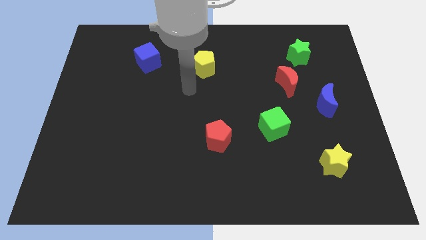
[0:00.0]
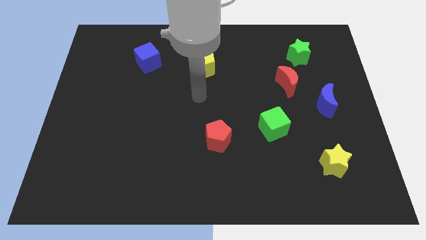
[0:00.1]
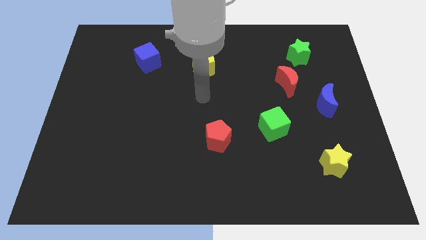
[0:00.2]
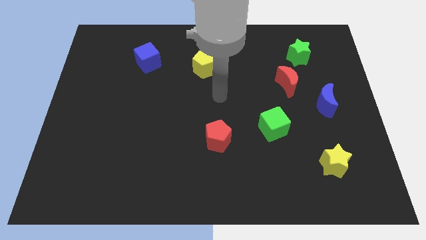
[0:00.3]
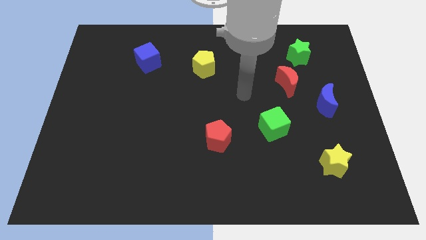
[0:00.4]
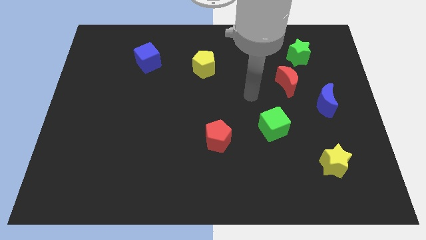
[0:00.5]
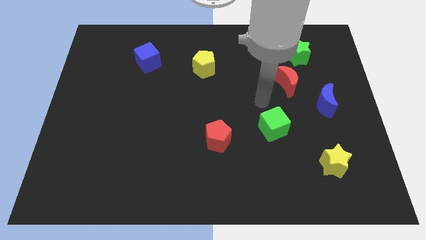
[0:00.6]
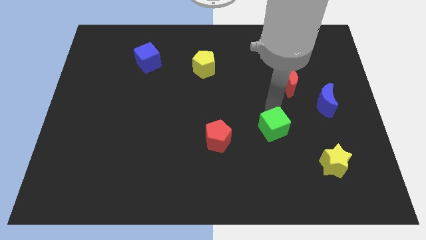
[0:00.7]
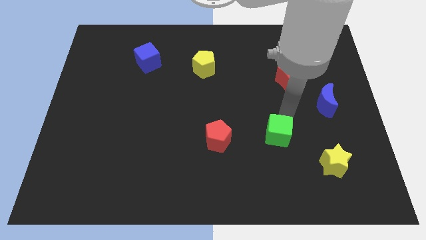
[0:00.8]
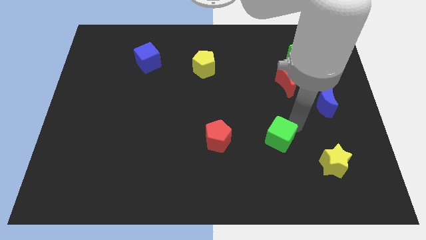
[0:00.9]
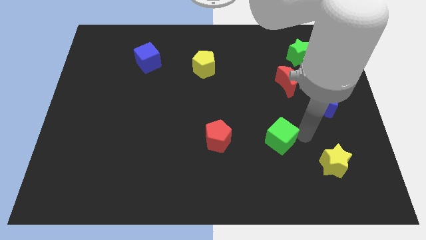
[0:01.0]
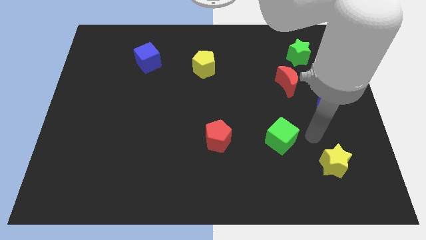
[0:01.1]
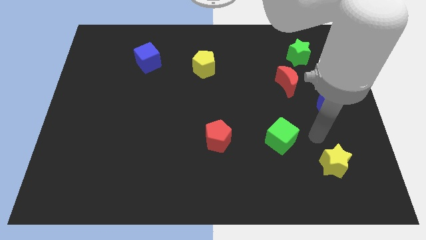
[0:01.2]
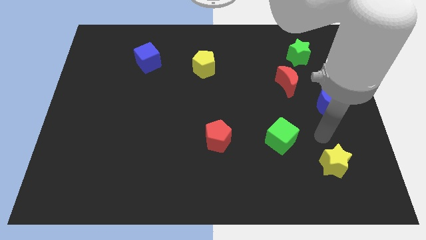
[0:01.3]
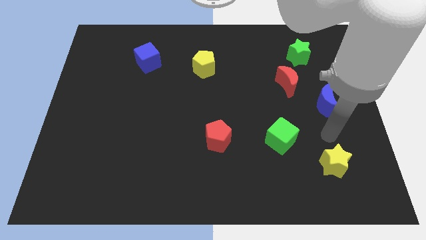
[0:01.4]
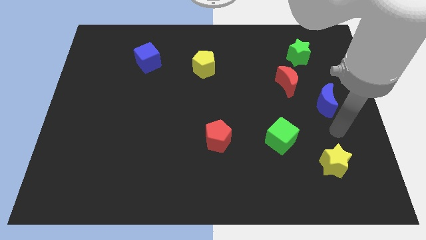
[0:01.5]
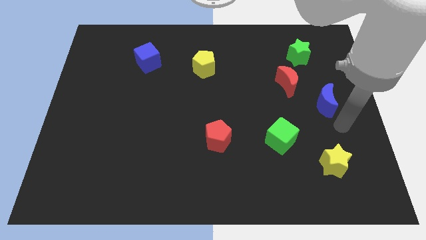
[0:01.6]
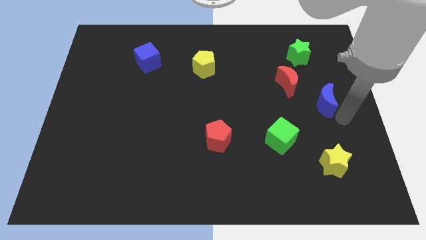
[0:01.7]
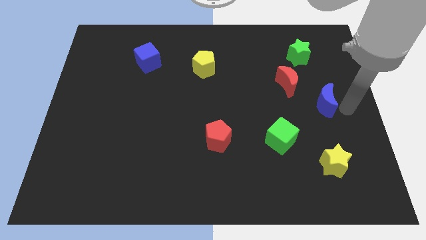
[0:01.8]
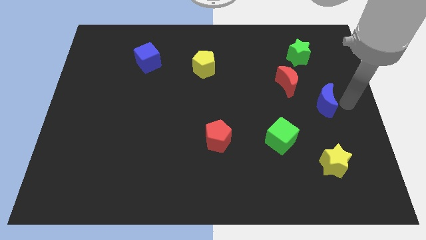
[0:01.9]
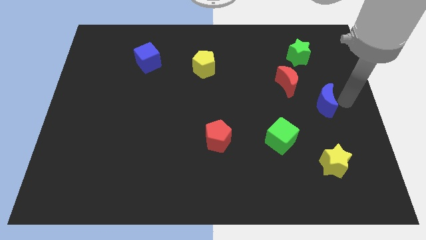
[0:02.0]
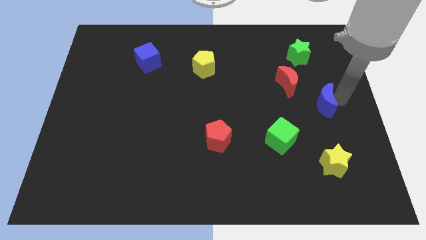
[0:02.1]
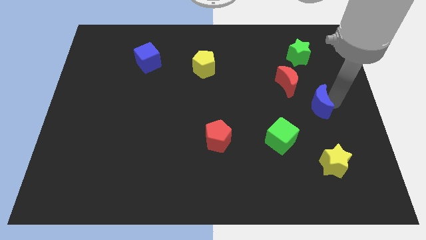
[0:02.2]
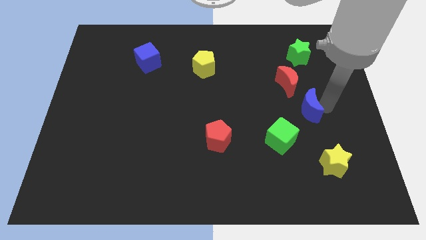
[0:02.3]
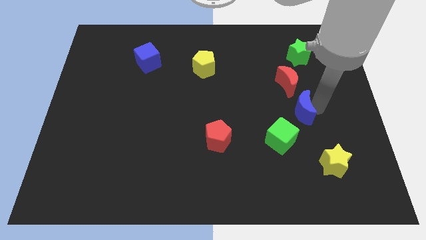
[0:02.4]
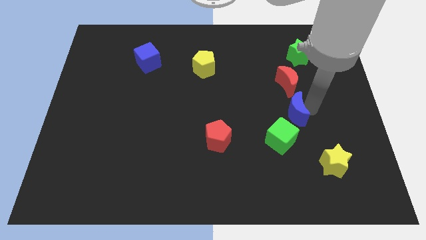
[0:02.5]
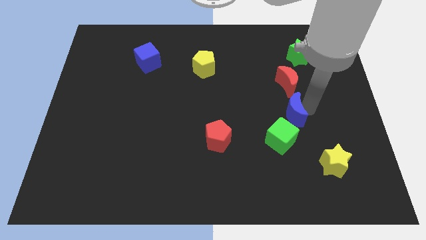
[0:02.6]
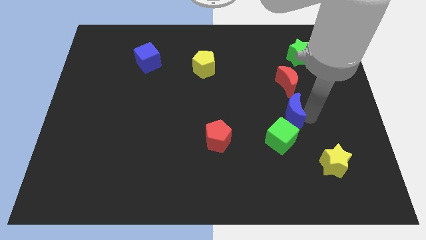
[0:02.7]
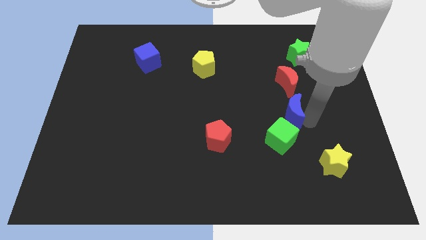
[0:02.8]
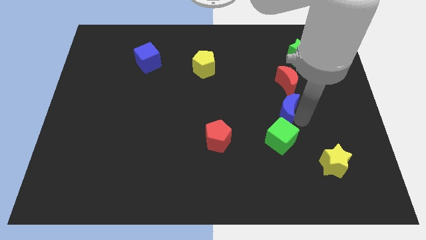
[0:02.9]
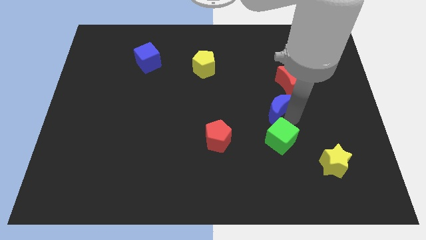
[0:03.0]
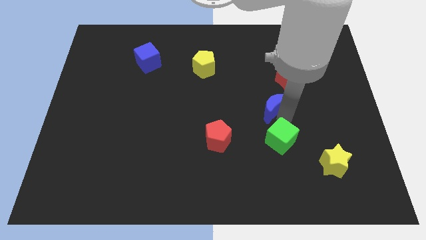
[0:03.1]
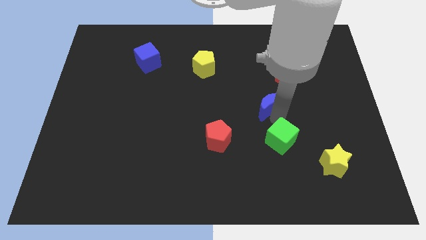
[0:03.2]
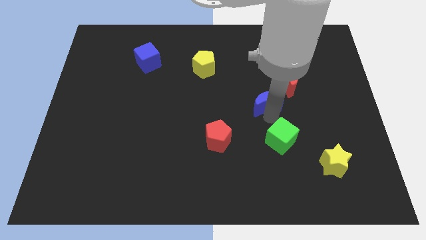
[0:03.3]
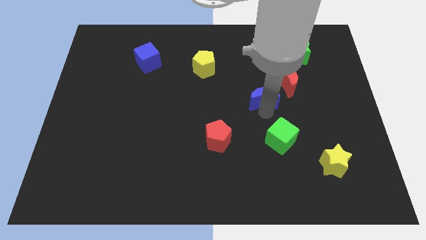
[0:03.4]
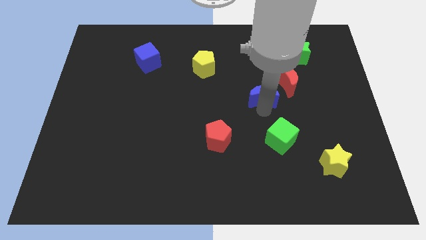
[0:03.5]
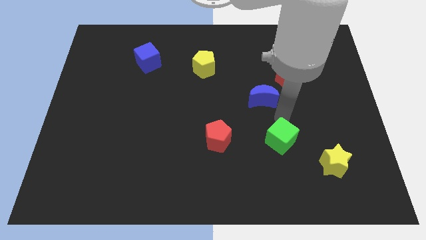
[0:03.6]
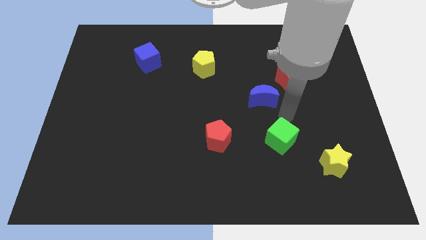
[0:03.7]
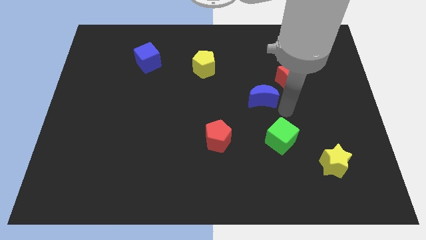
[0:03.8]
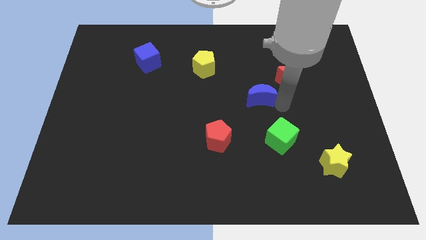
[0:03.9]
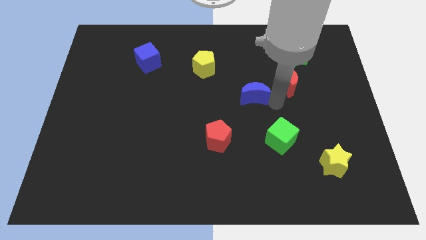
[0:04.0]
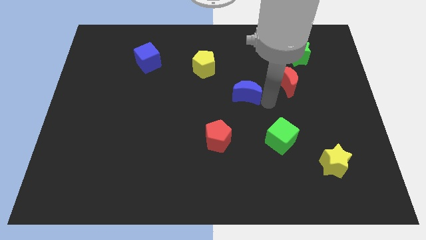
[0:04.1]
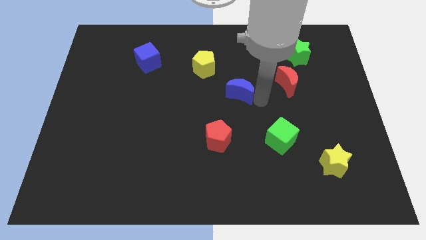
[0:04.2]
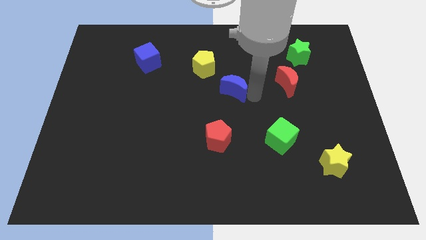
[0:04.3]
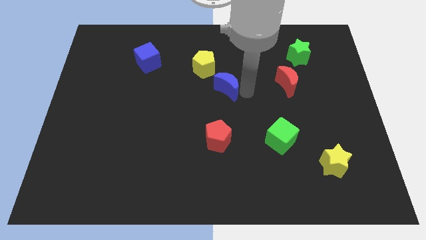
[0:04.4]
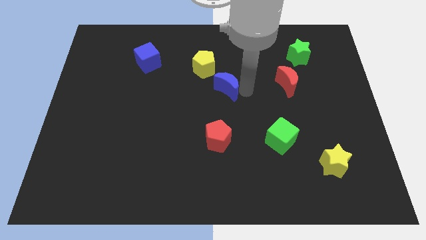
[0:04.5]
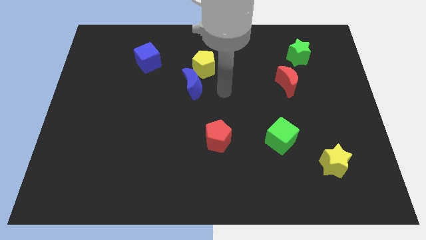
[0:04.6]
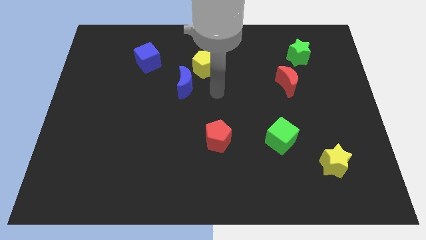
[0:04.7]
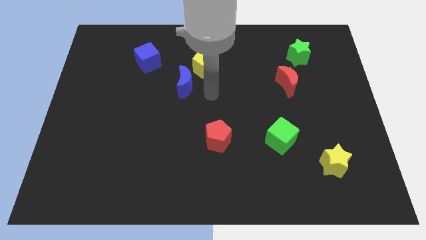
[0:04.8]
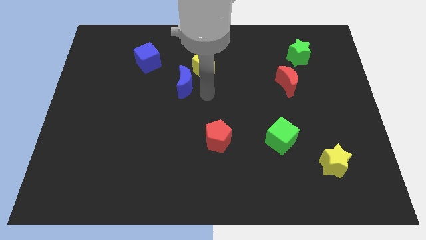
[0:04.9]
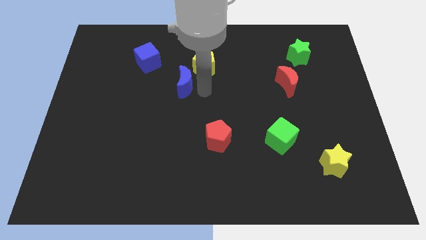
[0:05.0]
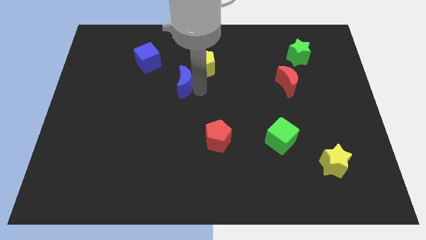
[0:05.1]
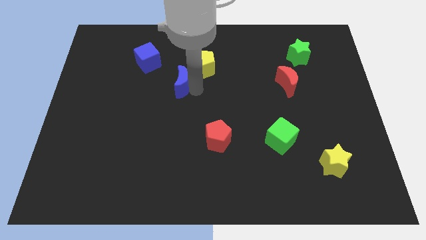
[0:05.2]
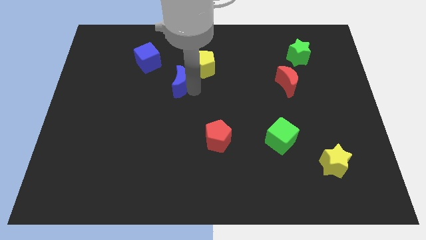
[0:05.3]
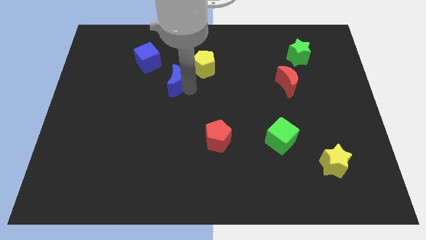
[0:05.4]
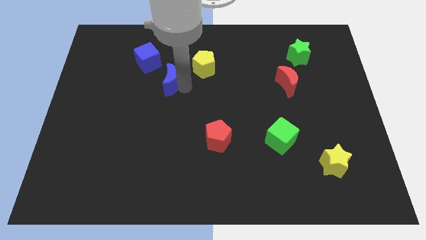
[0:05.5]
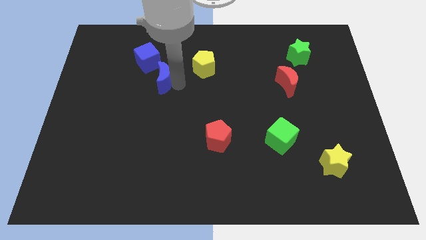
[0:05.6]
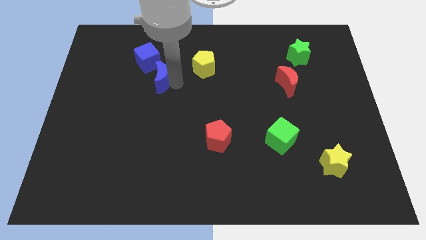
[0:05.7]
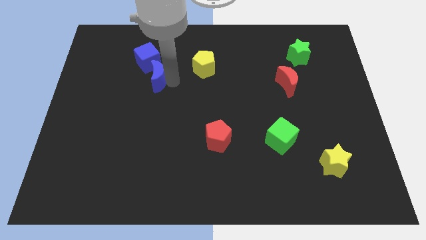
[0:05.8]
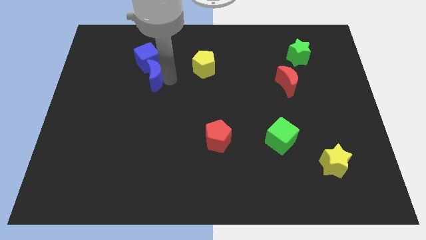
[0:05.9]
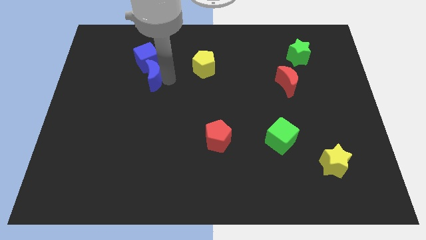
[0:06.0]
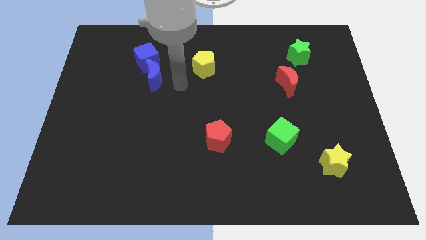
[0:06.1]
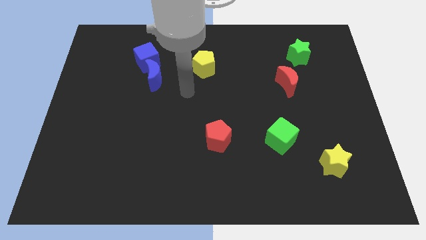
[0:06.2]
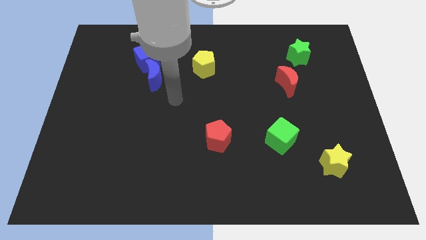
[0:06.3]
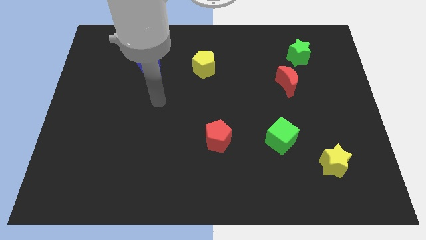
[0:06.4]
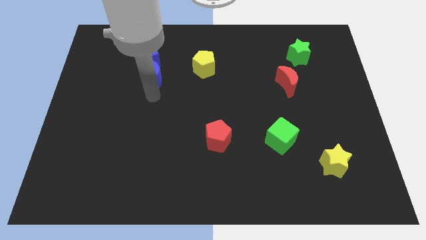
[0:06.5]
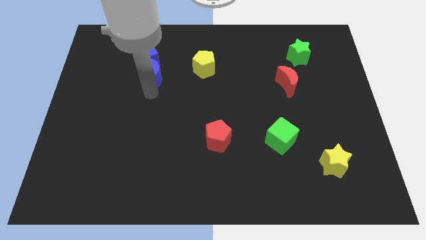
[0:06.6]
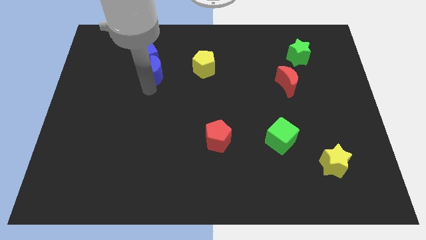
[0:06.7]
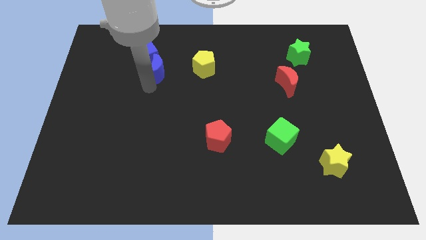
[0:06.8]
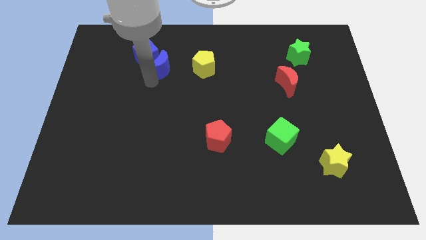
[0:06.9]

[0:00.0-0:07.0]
push the blue moon to the blue cube

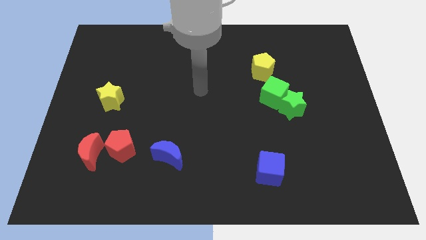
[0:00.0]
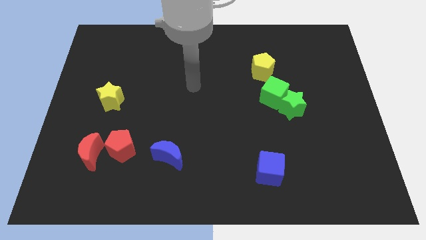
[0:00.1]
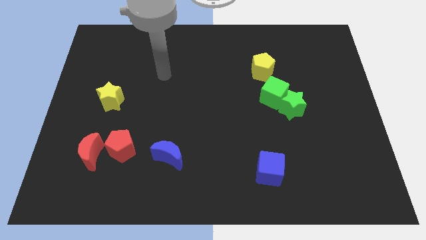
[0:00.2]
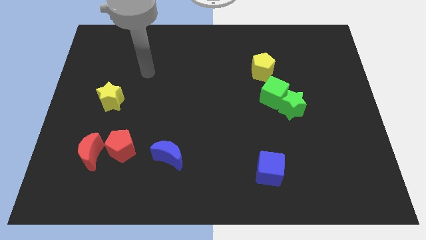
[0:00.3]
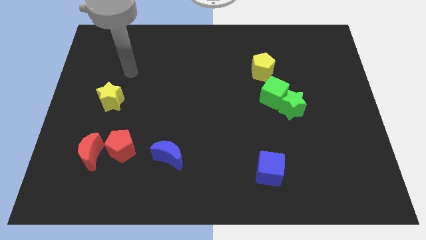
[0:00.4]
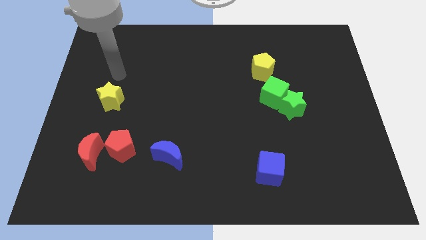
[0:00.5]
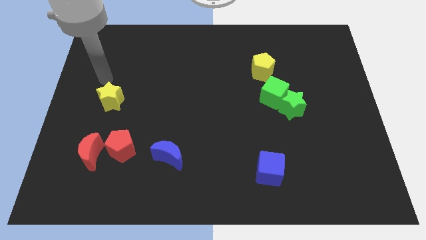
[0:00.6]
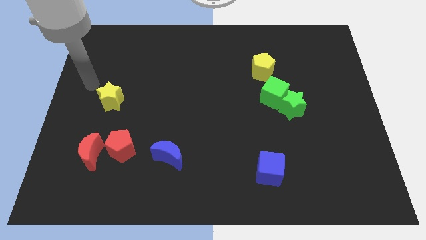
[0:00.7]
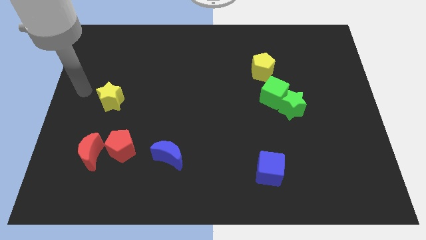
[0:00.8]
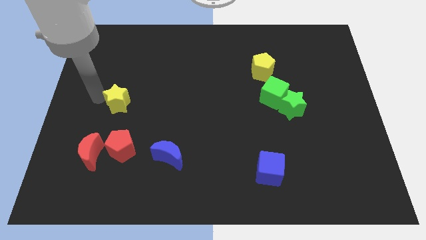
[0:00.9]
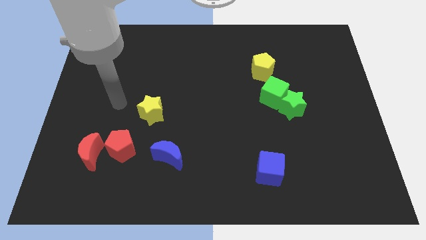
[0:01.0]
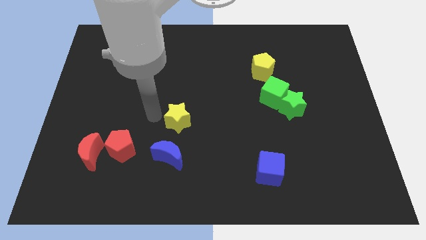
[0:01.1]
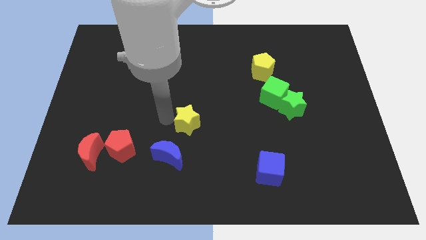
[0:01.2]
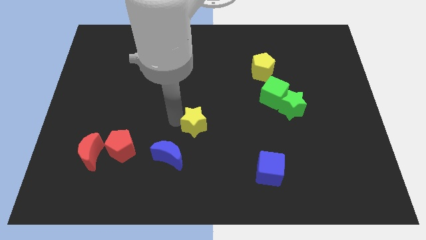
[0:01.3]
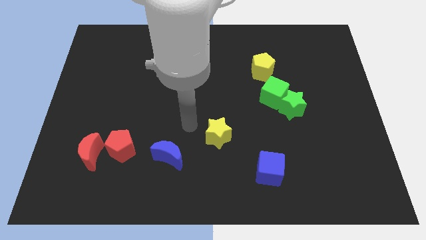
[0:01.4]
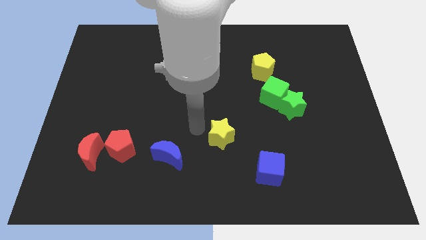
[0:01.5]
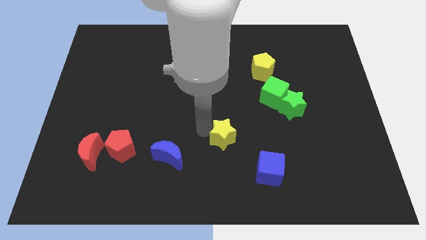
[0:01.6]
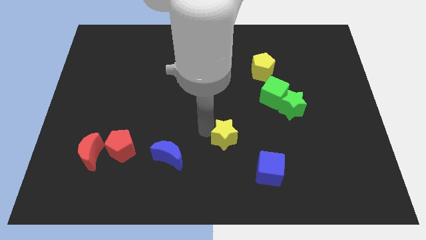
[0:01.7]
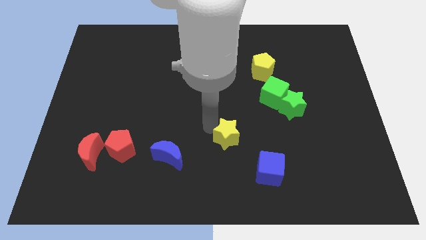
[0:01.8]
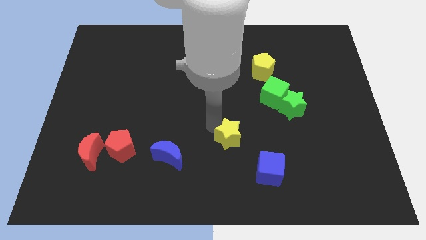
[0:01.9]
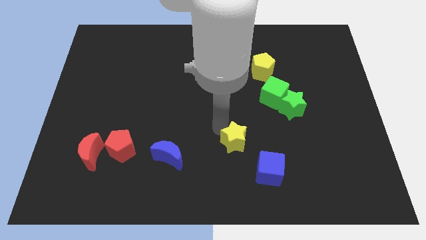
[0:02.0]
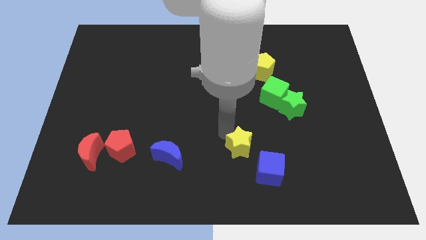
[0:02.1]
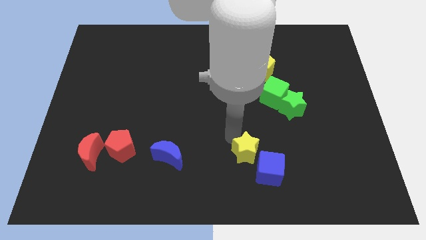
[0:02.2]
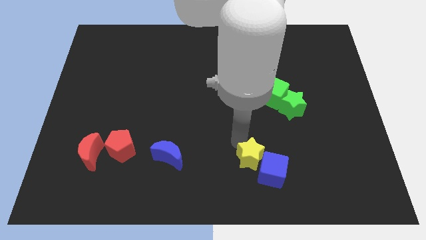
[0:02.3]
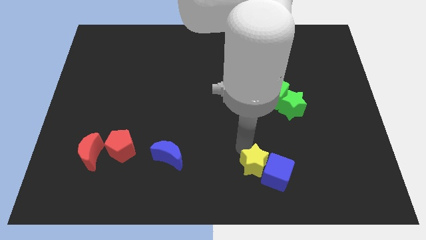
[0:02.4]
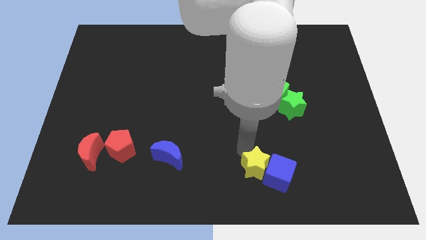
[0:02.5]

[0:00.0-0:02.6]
put the yellow star next to the blue cube
